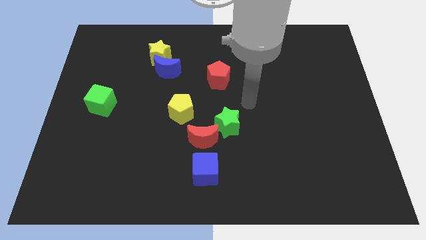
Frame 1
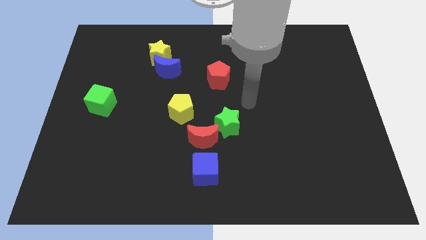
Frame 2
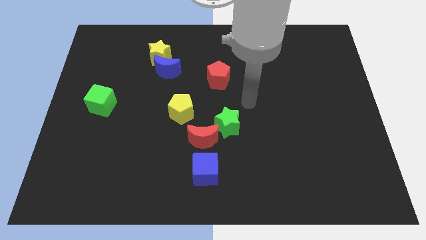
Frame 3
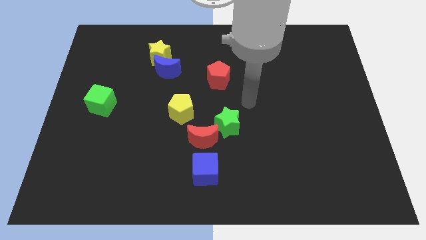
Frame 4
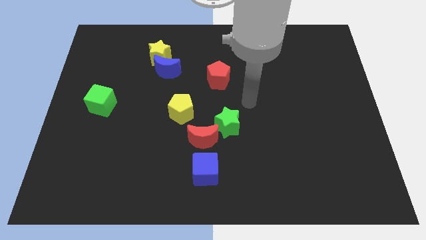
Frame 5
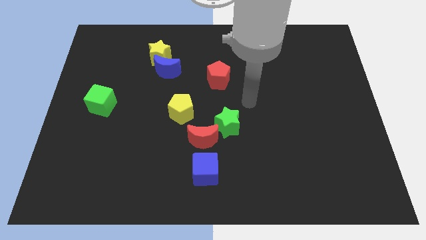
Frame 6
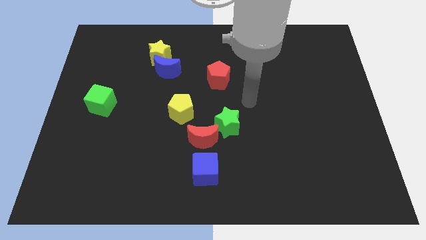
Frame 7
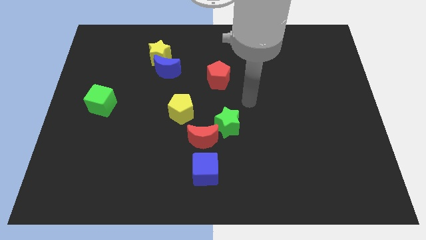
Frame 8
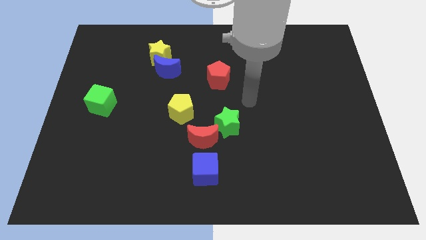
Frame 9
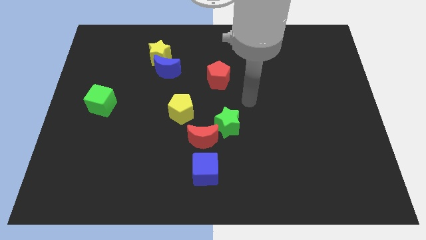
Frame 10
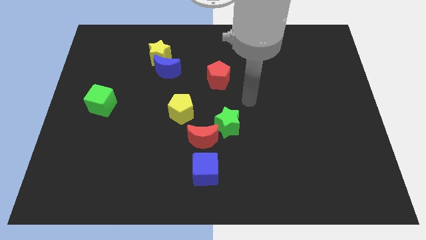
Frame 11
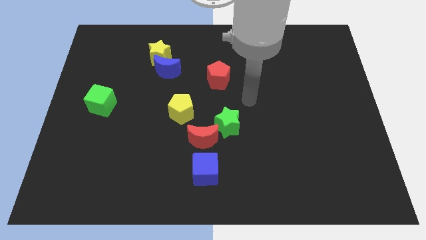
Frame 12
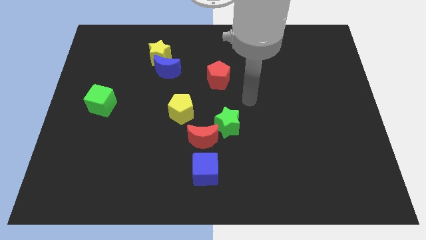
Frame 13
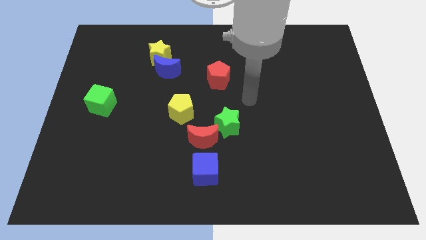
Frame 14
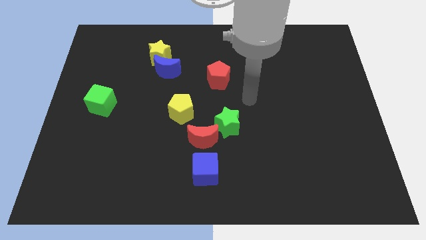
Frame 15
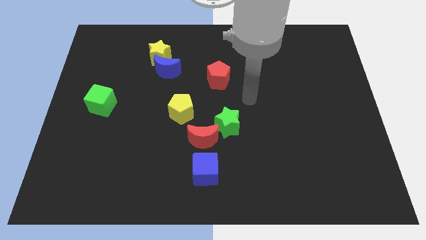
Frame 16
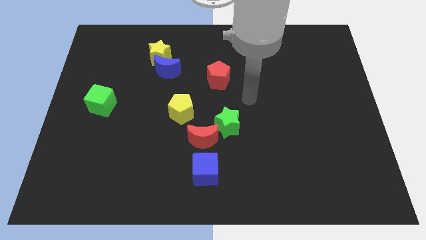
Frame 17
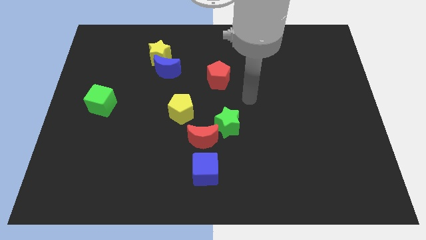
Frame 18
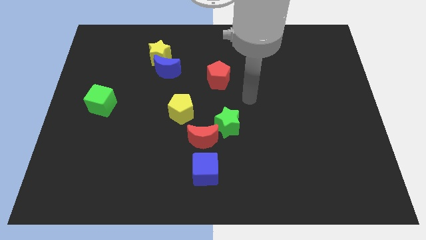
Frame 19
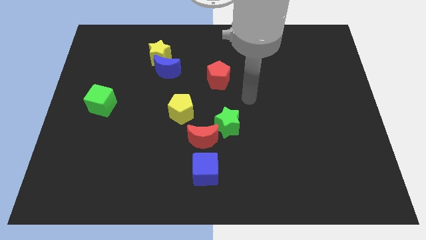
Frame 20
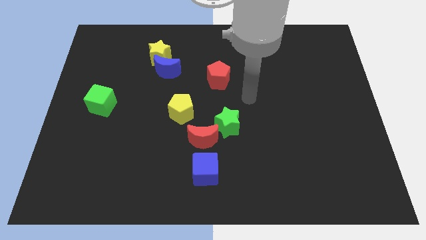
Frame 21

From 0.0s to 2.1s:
point your arm diagonal to the right of yellow pentagon

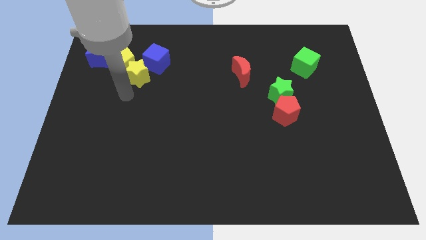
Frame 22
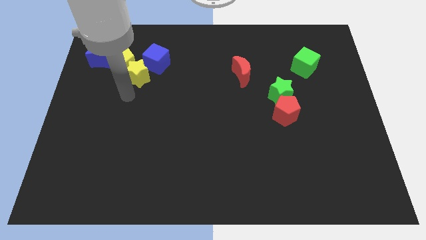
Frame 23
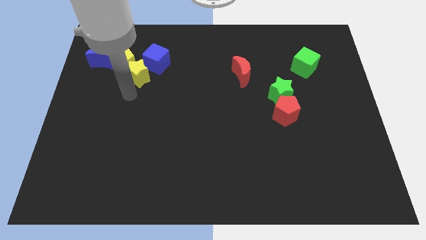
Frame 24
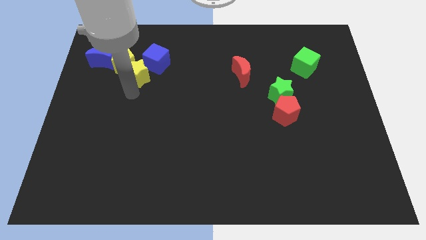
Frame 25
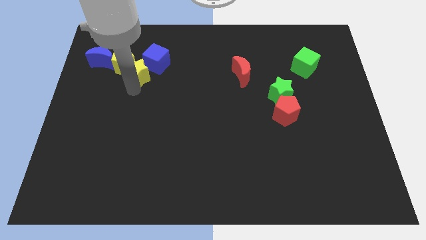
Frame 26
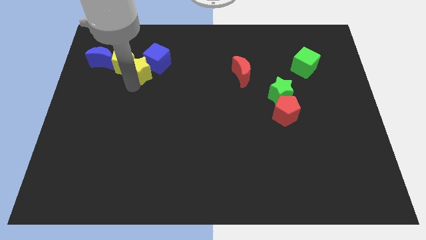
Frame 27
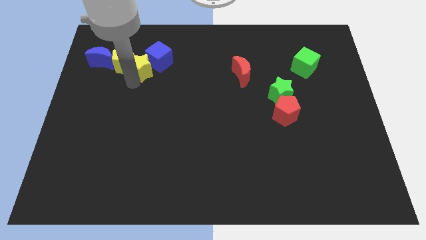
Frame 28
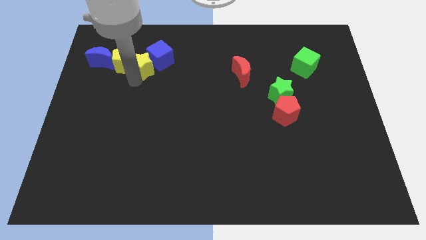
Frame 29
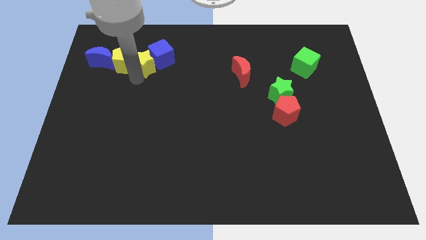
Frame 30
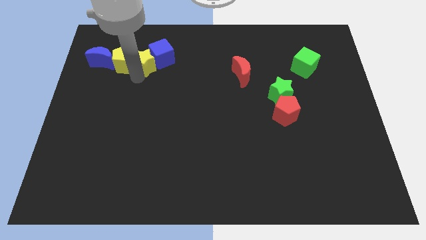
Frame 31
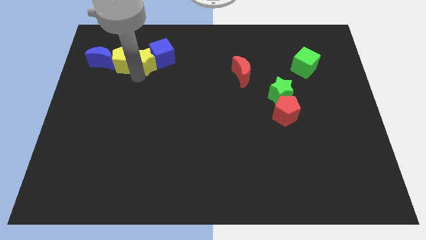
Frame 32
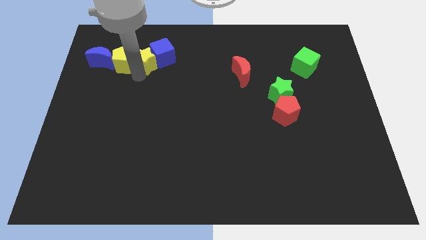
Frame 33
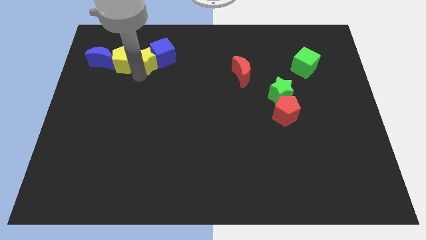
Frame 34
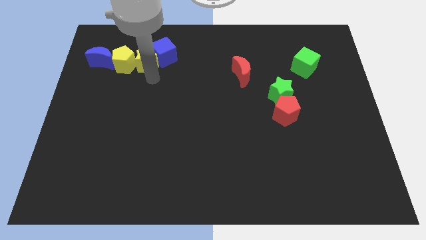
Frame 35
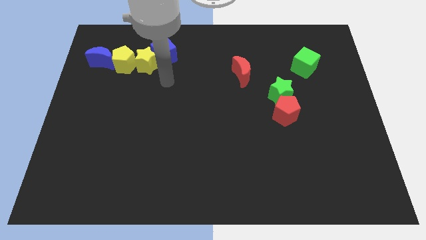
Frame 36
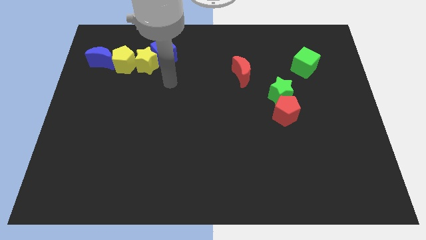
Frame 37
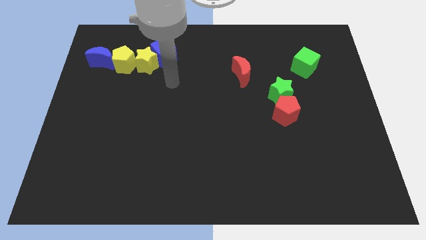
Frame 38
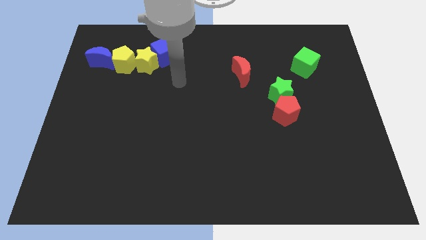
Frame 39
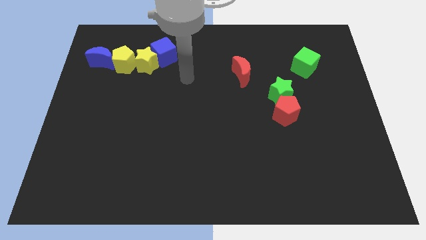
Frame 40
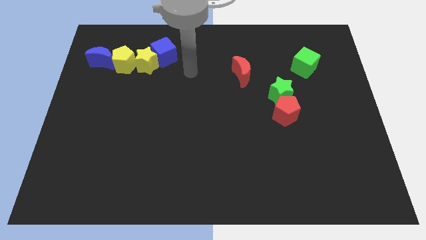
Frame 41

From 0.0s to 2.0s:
push the yellow star into the yellow pentagon and blue cube

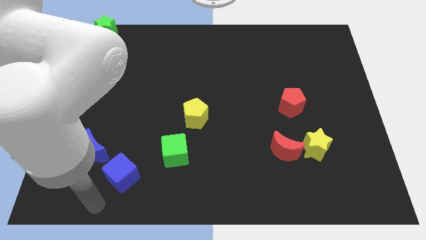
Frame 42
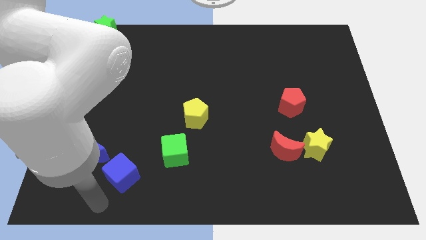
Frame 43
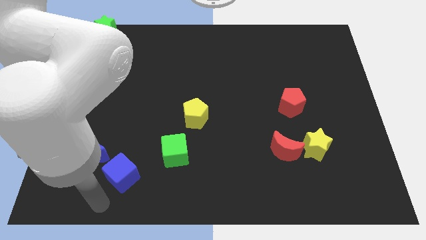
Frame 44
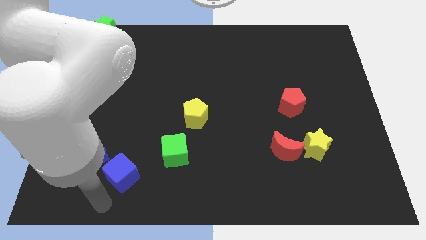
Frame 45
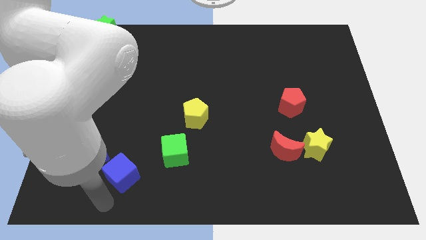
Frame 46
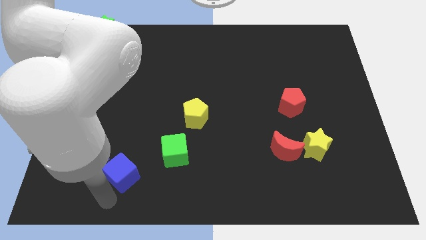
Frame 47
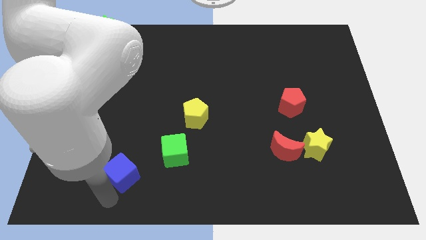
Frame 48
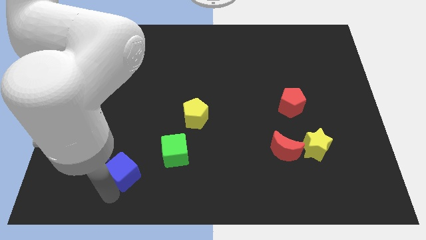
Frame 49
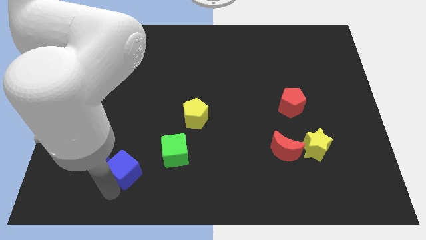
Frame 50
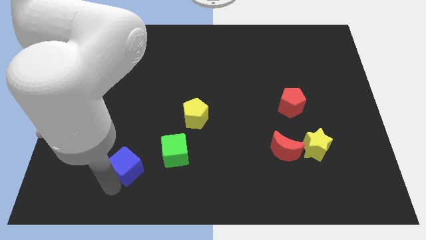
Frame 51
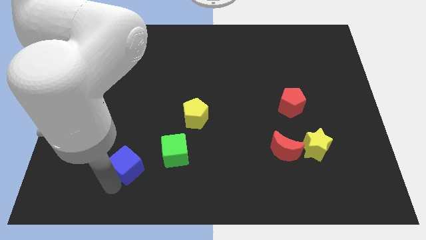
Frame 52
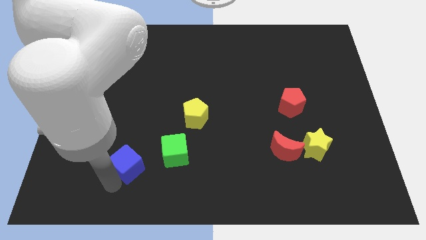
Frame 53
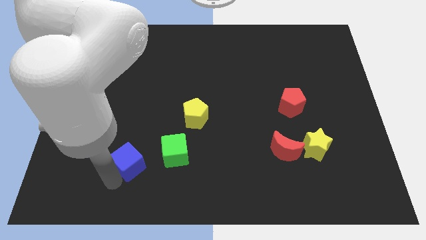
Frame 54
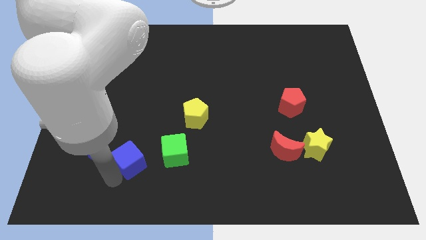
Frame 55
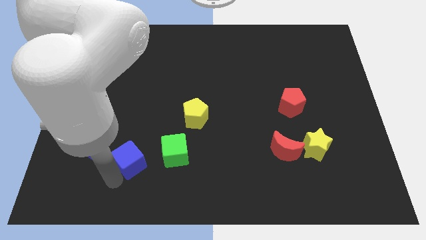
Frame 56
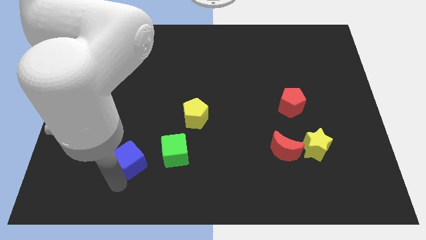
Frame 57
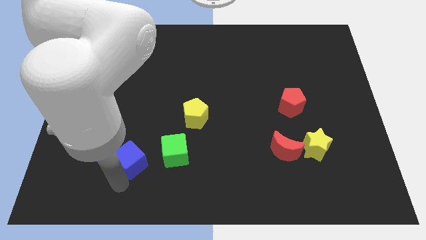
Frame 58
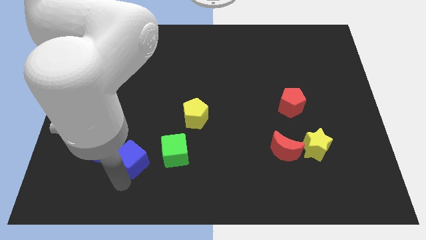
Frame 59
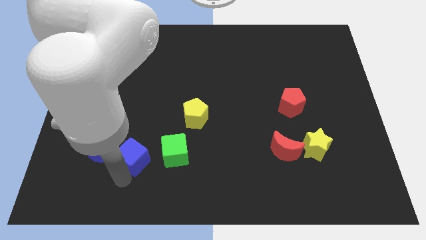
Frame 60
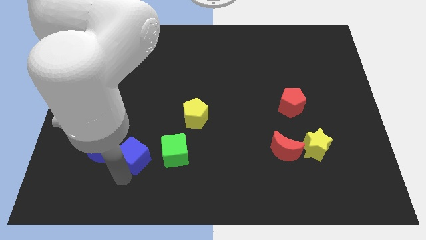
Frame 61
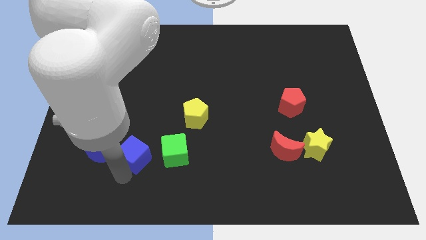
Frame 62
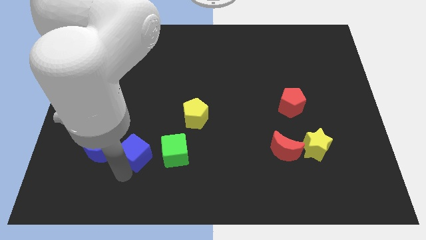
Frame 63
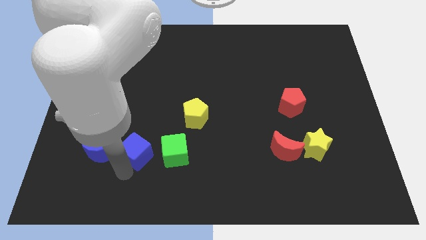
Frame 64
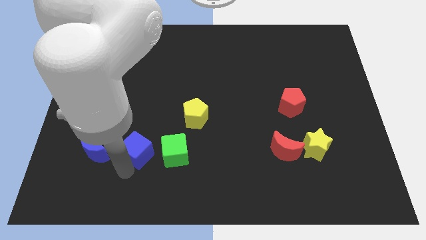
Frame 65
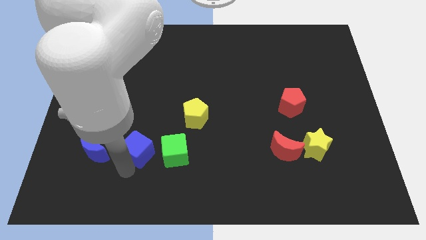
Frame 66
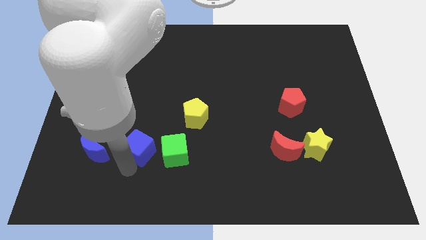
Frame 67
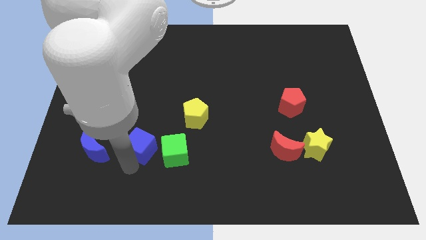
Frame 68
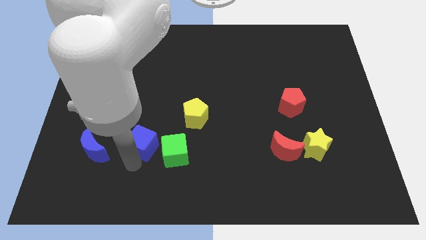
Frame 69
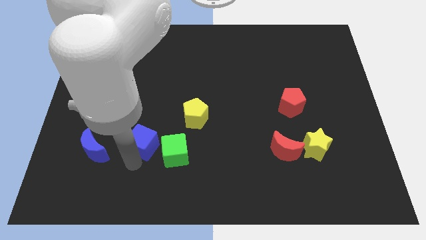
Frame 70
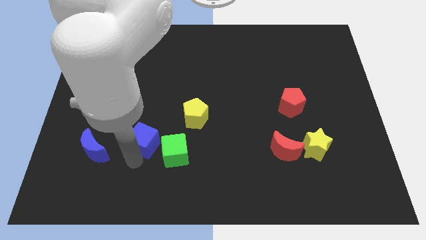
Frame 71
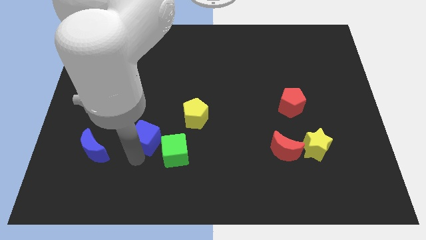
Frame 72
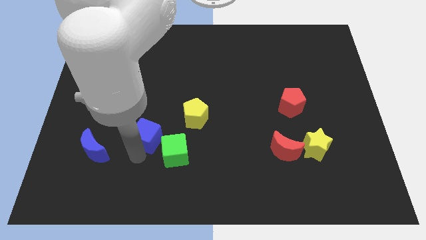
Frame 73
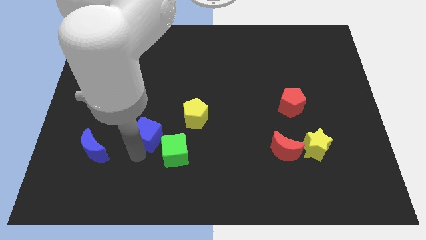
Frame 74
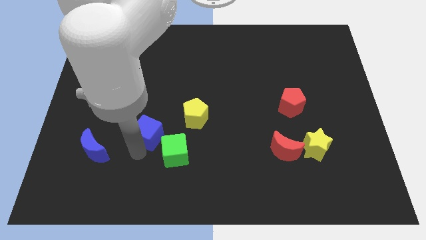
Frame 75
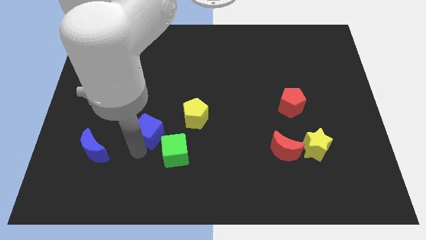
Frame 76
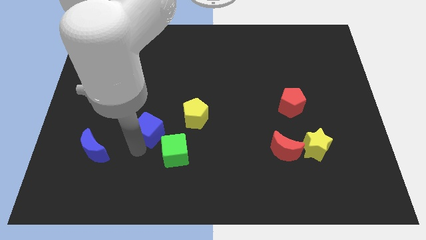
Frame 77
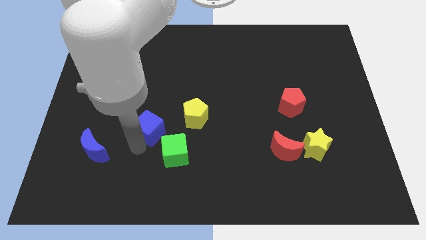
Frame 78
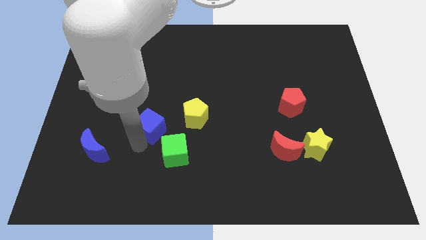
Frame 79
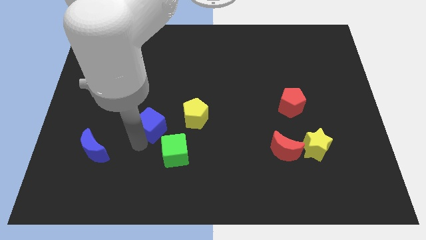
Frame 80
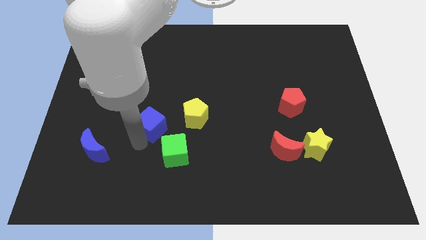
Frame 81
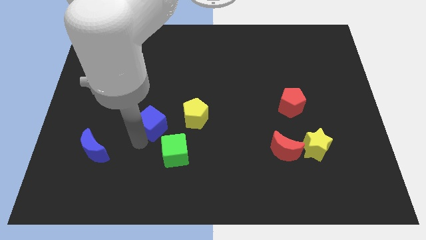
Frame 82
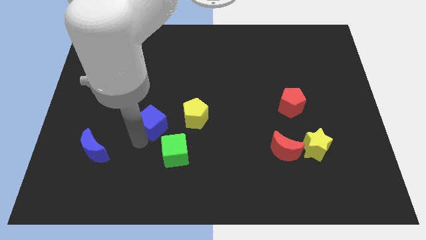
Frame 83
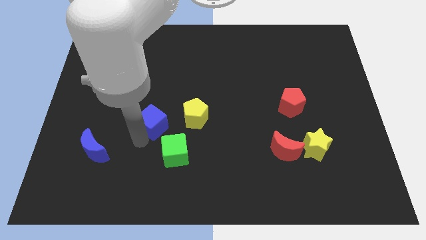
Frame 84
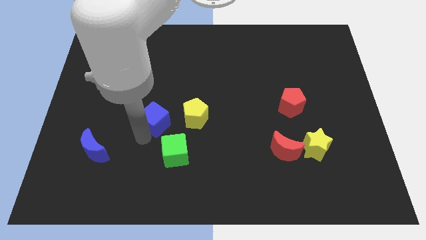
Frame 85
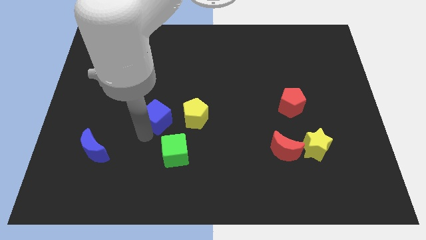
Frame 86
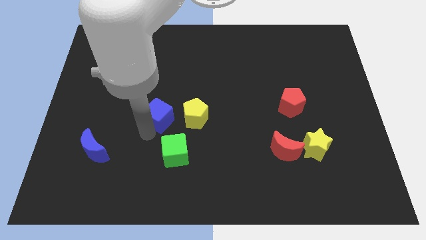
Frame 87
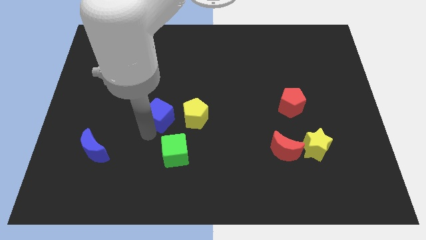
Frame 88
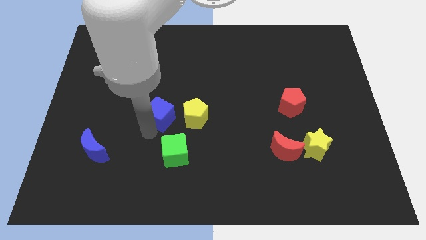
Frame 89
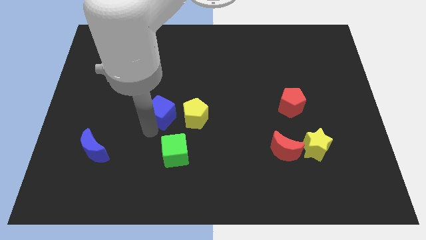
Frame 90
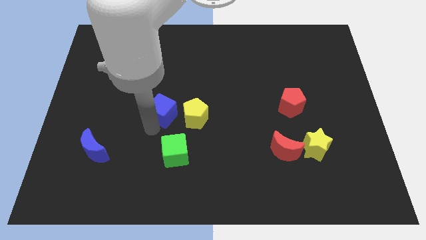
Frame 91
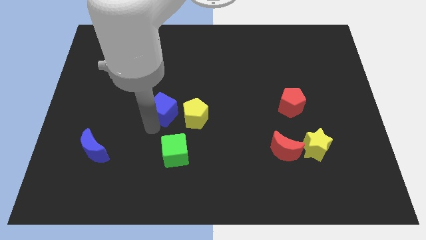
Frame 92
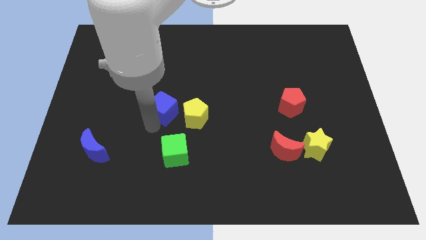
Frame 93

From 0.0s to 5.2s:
place the blue cube to the left of the yellow pentagon
